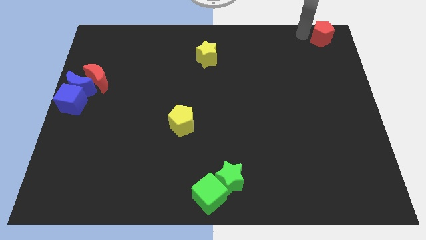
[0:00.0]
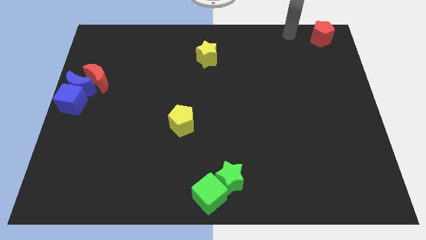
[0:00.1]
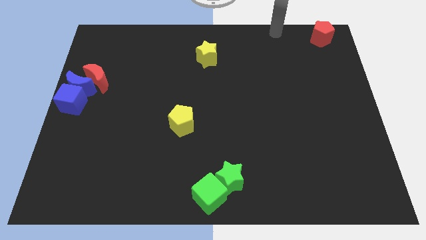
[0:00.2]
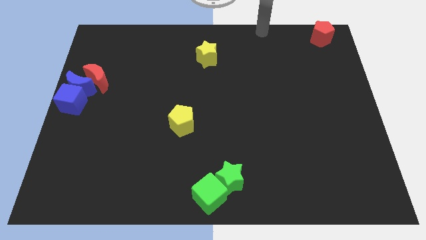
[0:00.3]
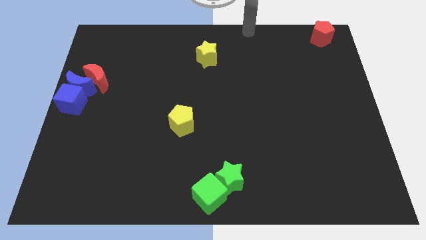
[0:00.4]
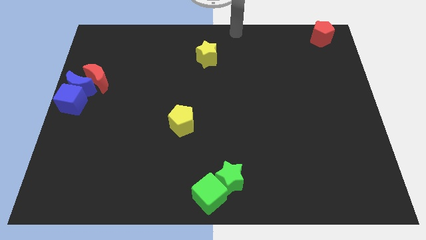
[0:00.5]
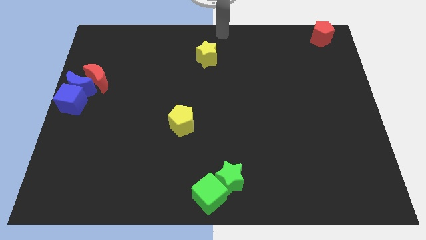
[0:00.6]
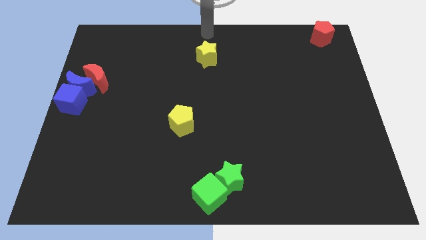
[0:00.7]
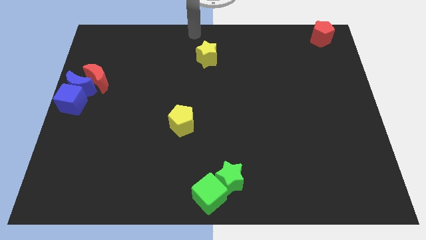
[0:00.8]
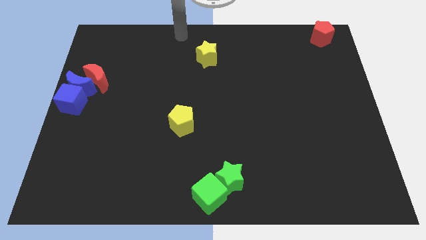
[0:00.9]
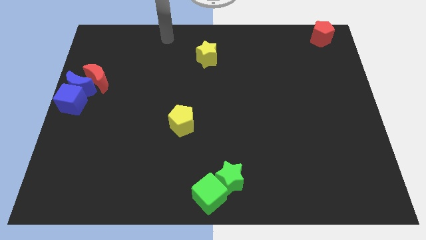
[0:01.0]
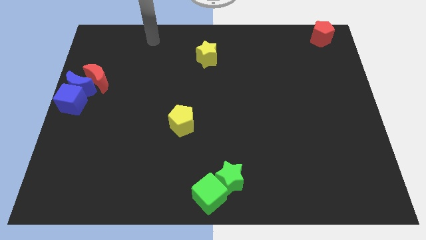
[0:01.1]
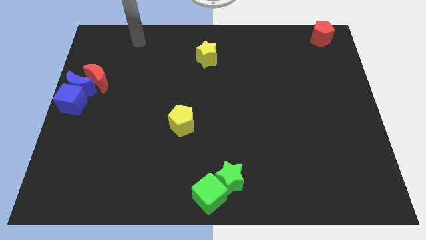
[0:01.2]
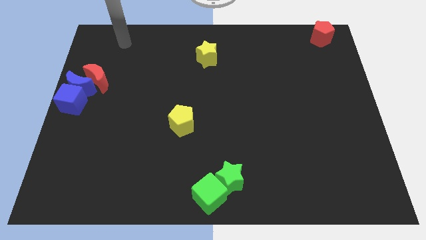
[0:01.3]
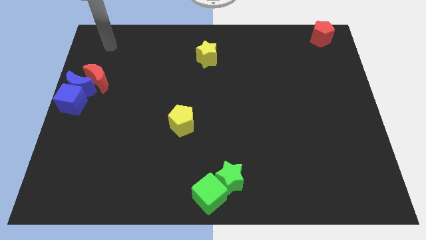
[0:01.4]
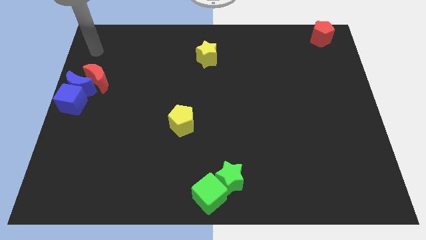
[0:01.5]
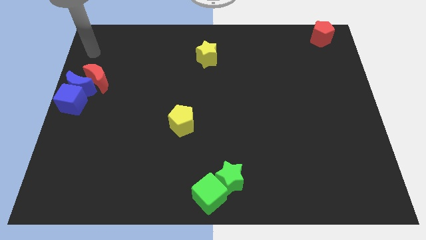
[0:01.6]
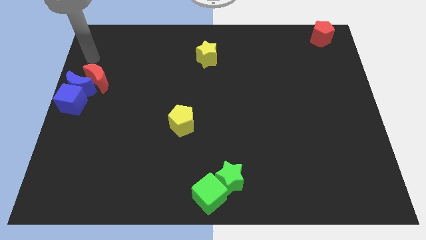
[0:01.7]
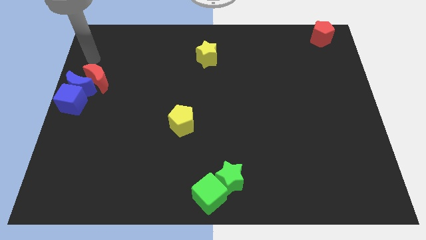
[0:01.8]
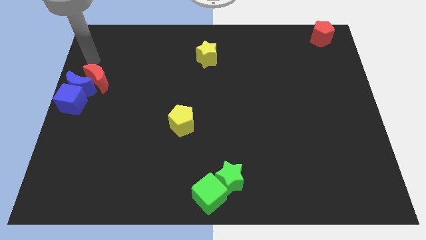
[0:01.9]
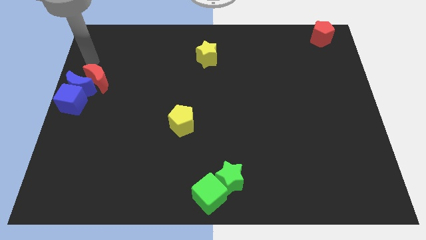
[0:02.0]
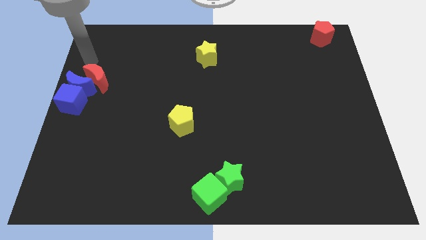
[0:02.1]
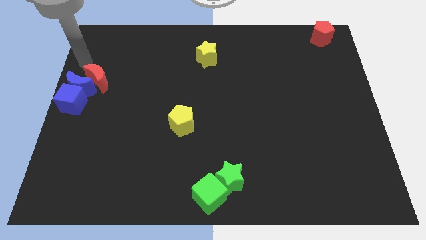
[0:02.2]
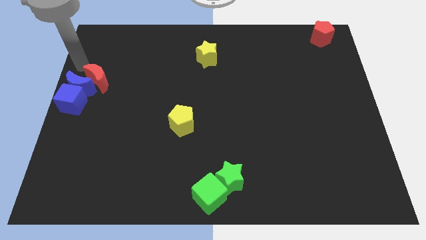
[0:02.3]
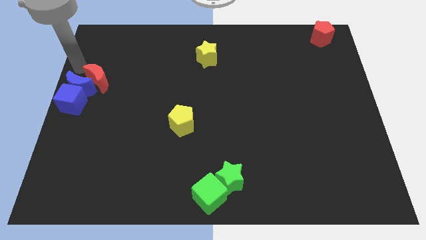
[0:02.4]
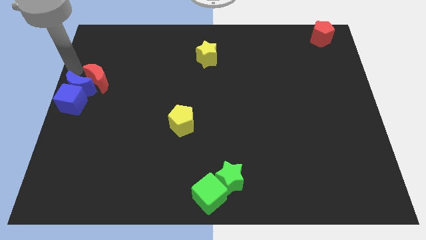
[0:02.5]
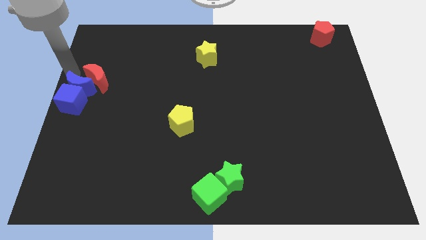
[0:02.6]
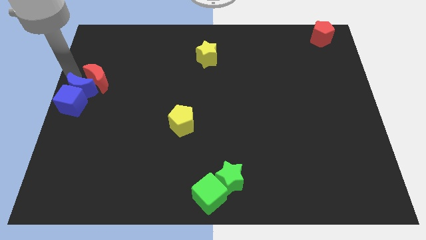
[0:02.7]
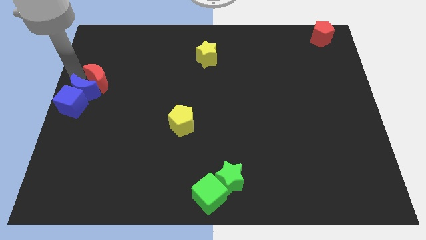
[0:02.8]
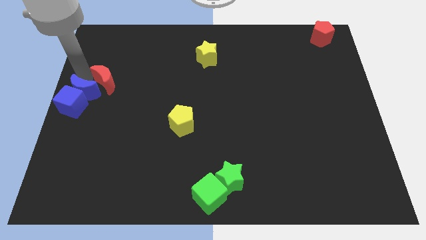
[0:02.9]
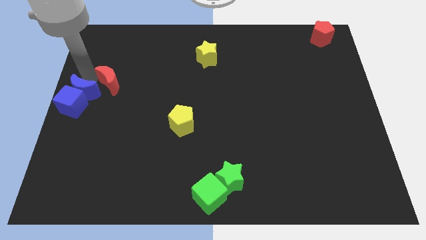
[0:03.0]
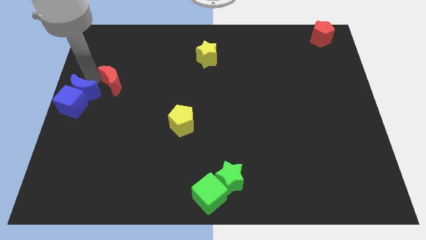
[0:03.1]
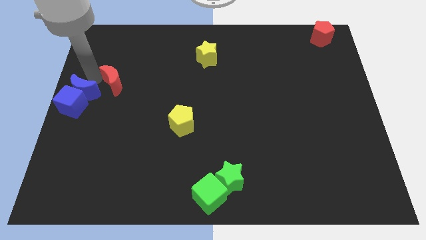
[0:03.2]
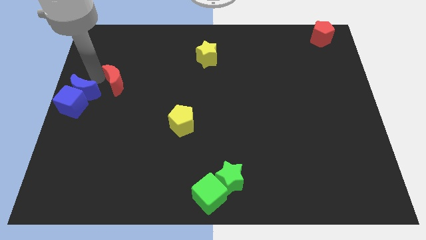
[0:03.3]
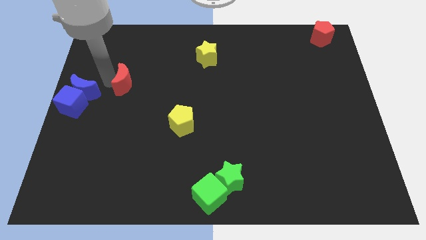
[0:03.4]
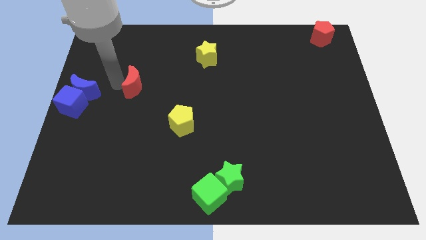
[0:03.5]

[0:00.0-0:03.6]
separate the red moon from the blue moon

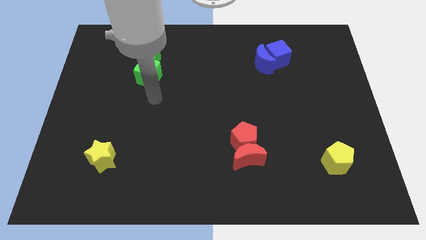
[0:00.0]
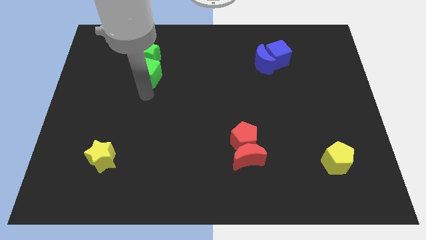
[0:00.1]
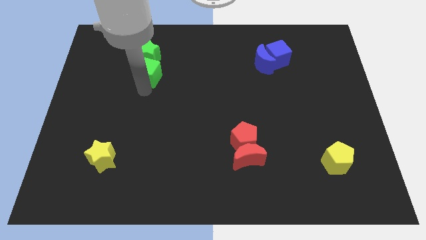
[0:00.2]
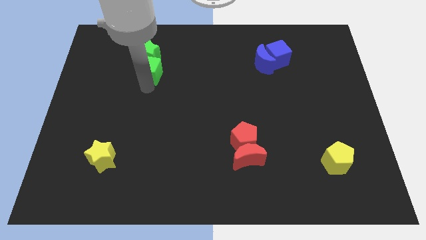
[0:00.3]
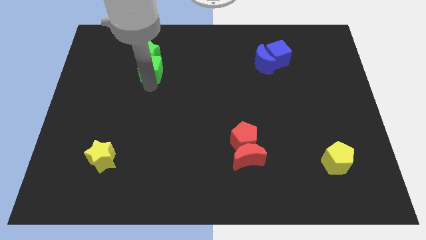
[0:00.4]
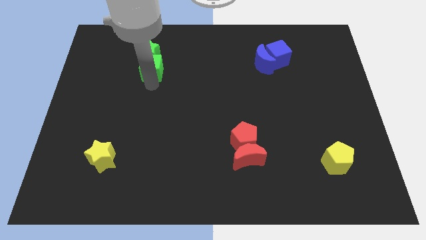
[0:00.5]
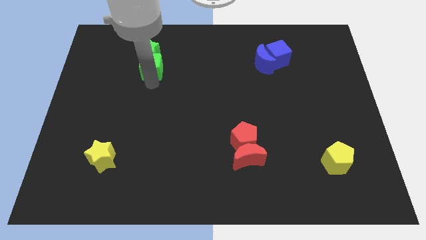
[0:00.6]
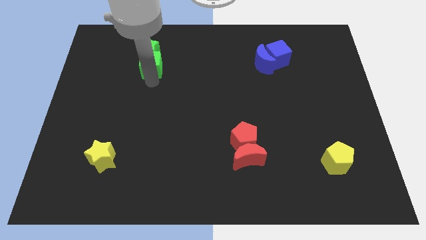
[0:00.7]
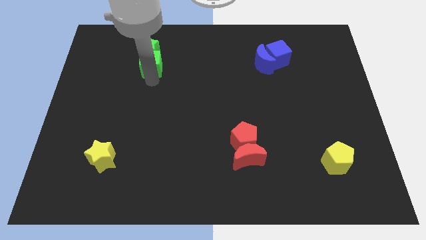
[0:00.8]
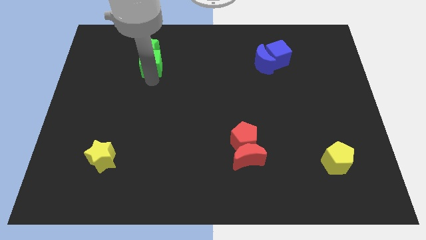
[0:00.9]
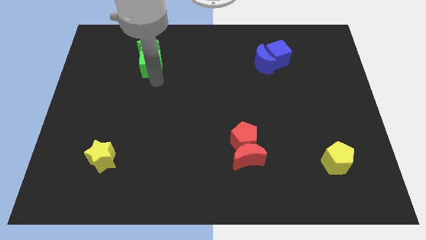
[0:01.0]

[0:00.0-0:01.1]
push the green cube into the green star

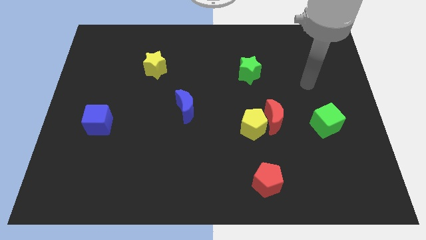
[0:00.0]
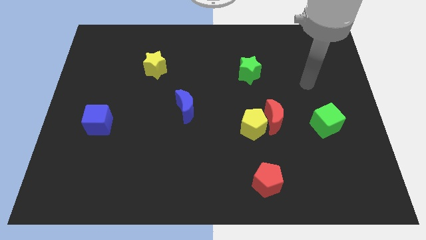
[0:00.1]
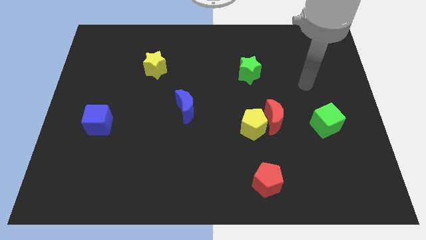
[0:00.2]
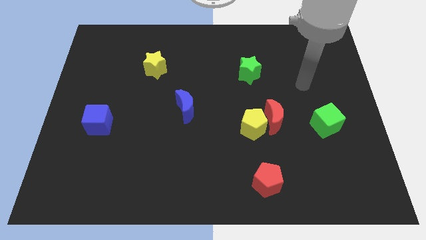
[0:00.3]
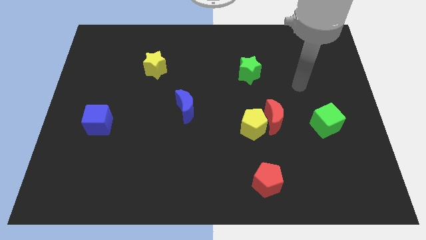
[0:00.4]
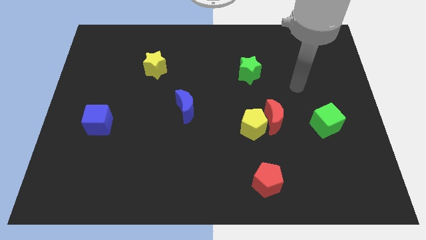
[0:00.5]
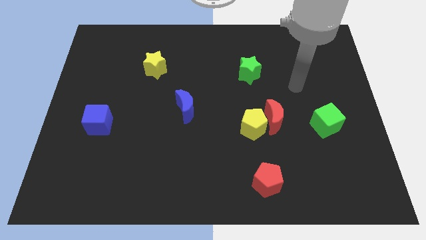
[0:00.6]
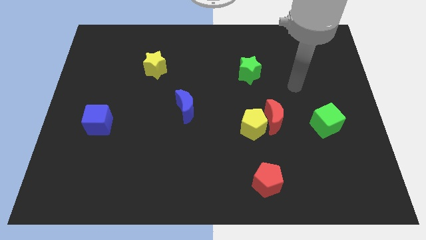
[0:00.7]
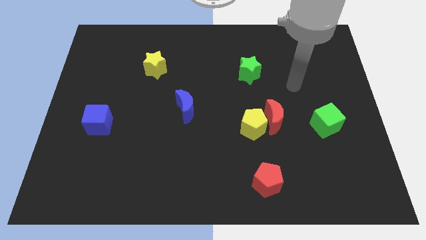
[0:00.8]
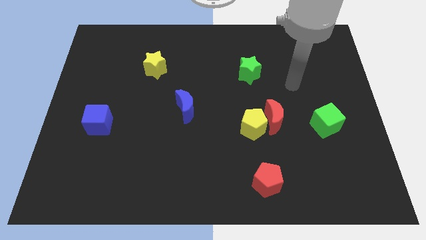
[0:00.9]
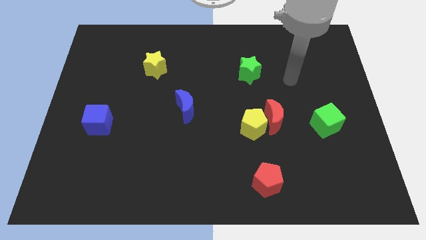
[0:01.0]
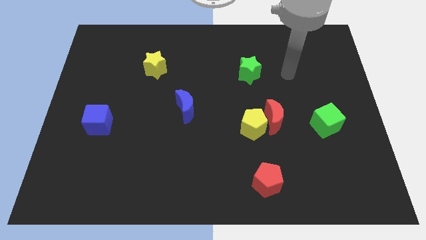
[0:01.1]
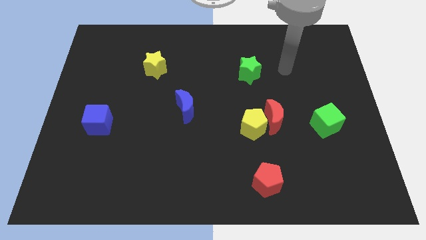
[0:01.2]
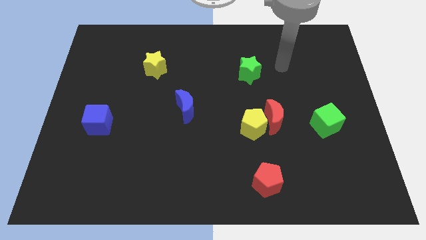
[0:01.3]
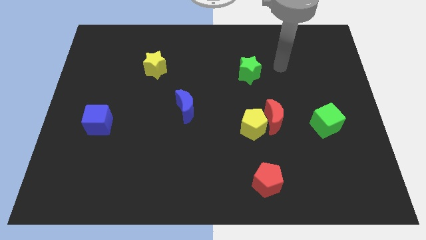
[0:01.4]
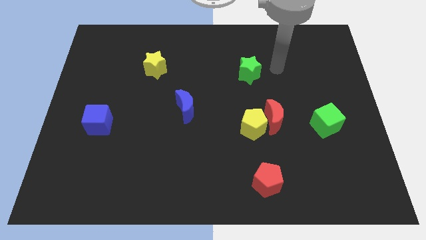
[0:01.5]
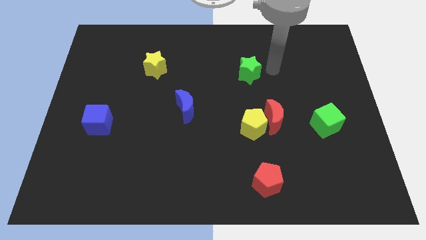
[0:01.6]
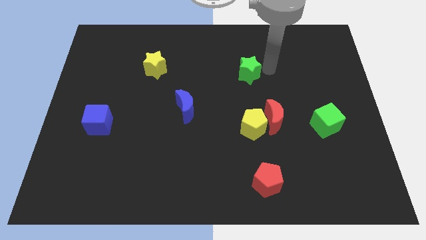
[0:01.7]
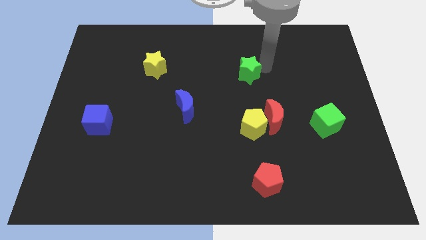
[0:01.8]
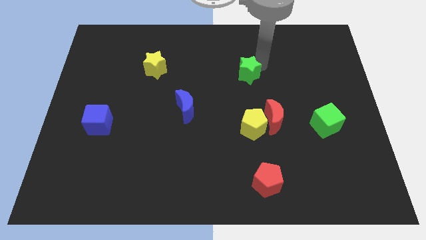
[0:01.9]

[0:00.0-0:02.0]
move your arm close to the green star

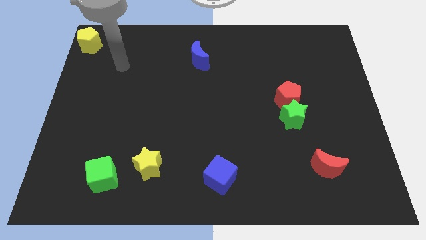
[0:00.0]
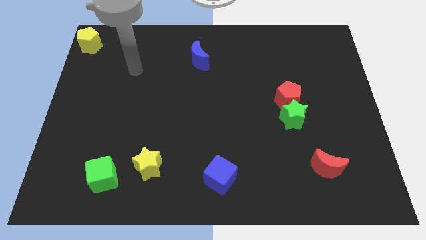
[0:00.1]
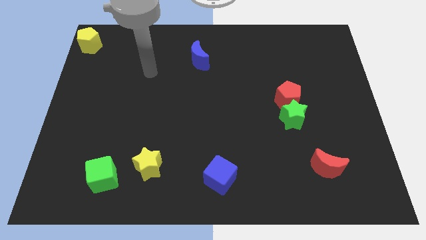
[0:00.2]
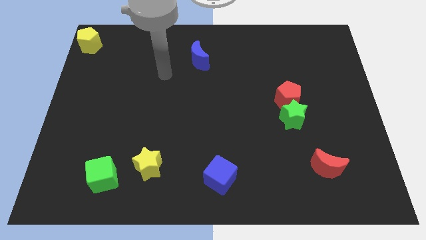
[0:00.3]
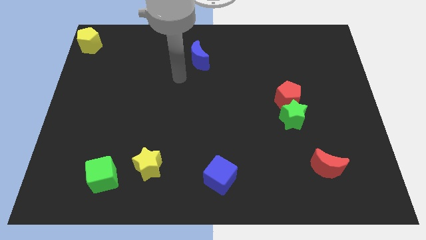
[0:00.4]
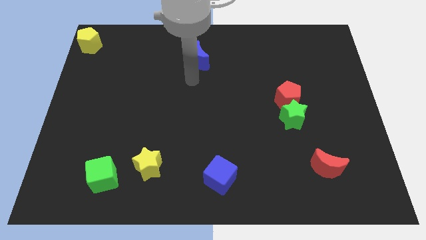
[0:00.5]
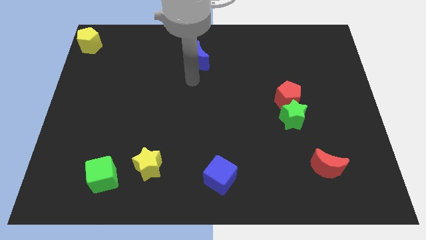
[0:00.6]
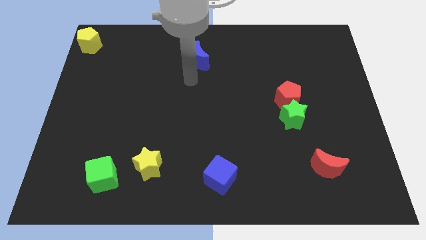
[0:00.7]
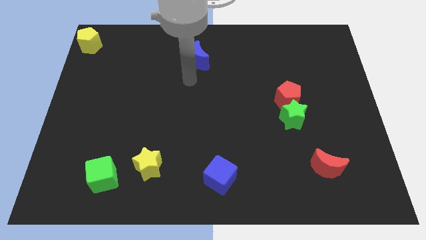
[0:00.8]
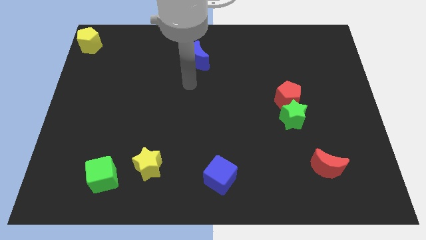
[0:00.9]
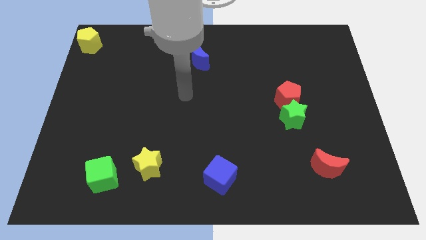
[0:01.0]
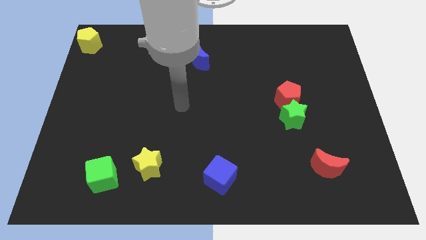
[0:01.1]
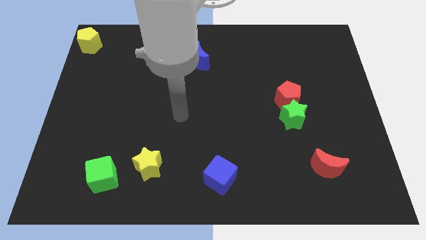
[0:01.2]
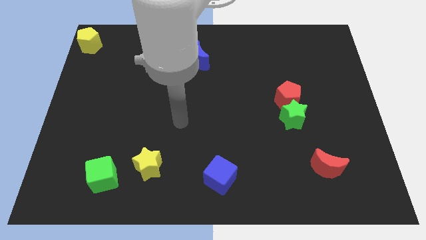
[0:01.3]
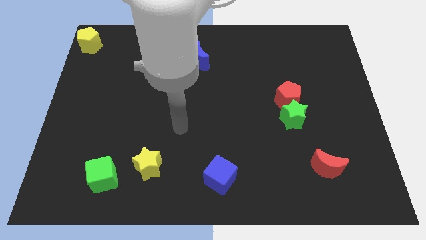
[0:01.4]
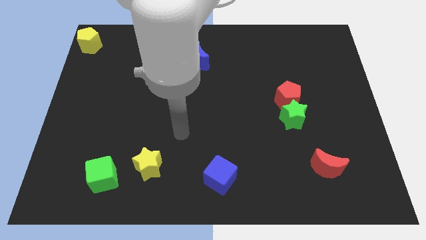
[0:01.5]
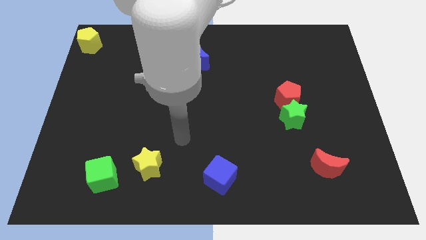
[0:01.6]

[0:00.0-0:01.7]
point your arm downwards

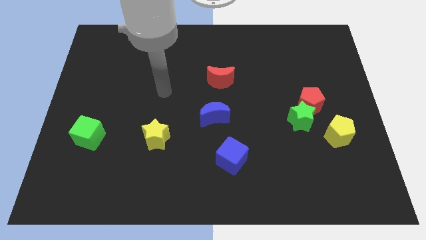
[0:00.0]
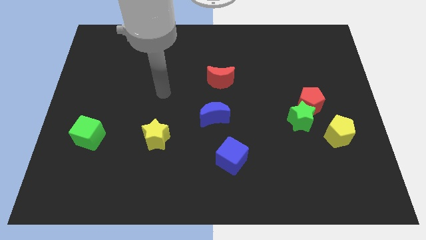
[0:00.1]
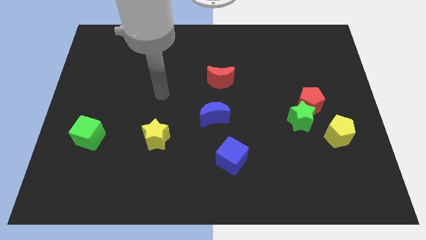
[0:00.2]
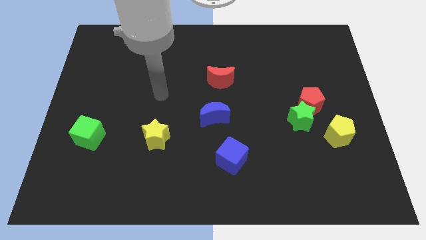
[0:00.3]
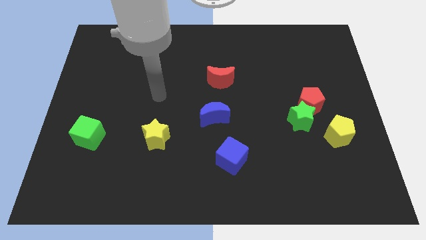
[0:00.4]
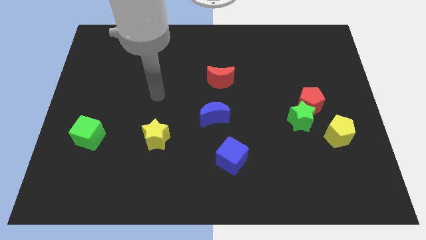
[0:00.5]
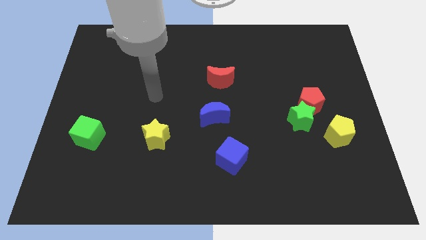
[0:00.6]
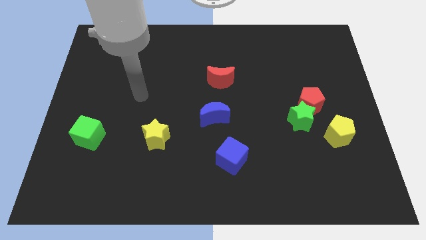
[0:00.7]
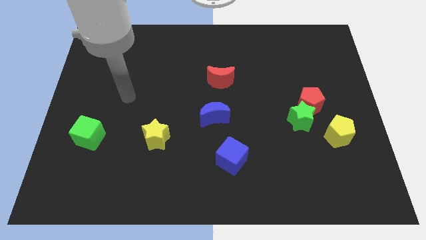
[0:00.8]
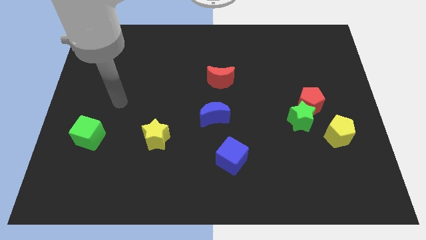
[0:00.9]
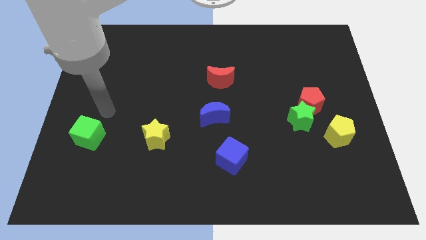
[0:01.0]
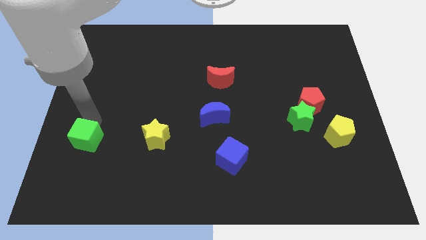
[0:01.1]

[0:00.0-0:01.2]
place your hand vertically above the green cube
